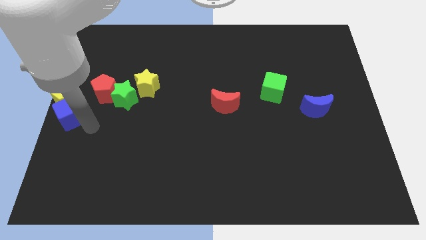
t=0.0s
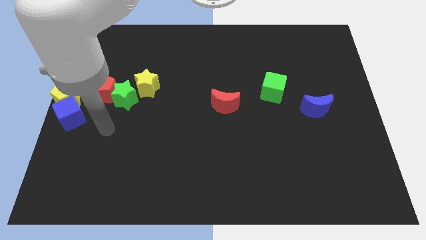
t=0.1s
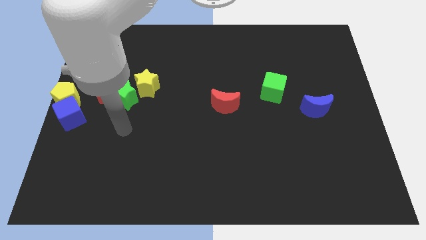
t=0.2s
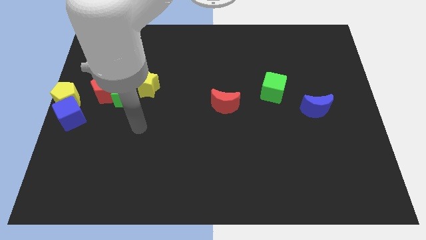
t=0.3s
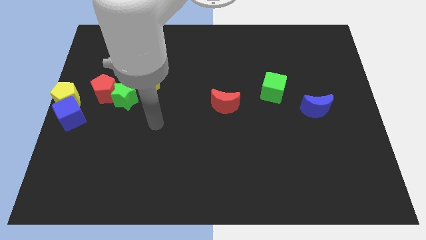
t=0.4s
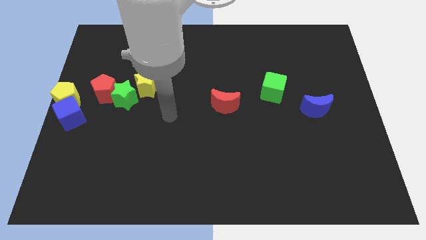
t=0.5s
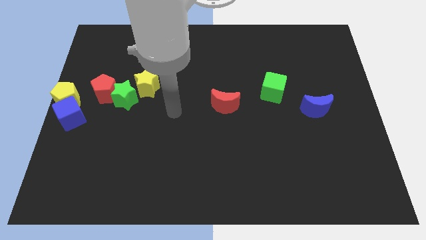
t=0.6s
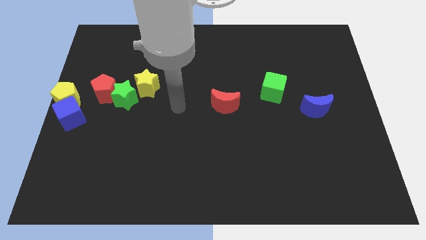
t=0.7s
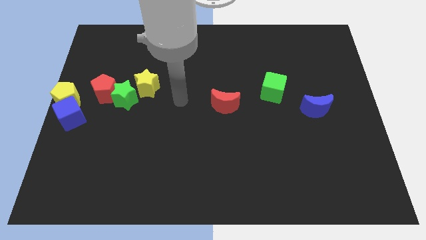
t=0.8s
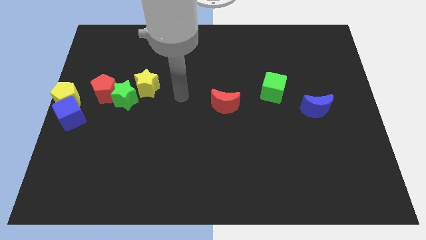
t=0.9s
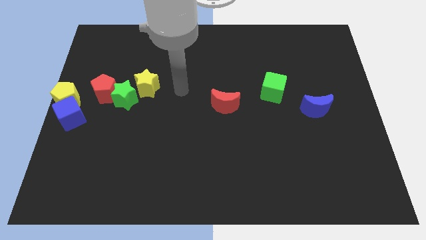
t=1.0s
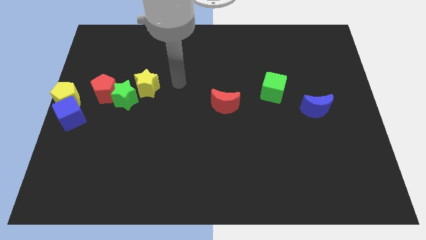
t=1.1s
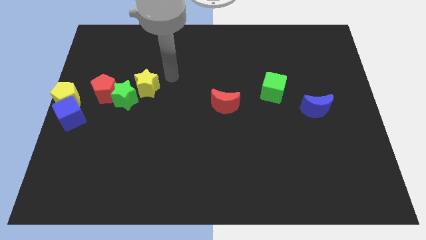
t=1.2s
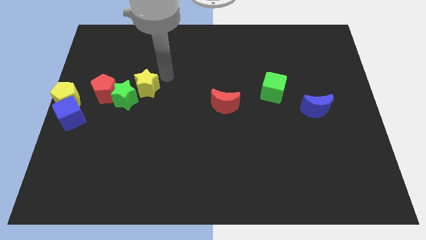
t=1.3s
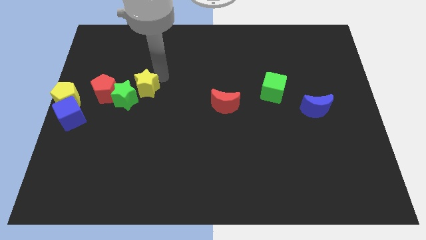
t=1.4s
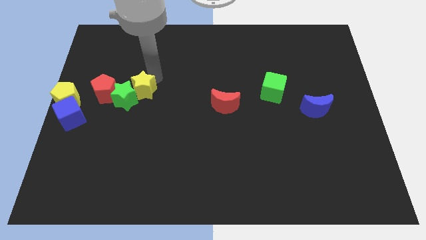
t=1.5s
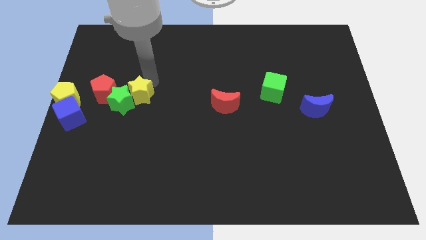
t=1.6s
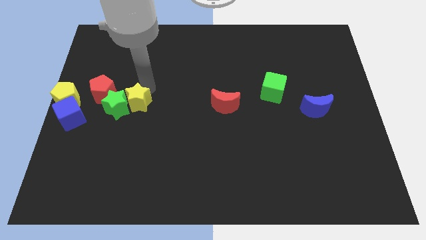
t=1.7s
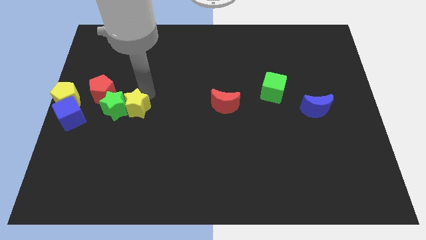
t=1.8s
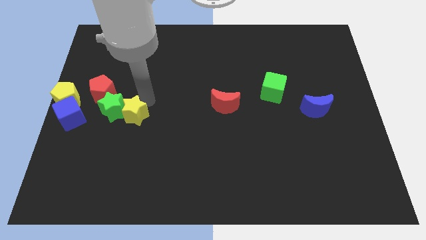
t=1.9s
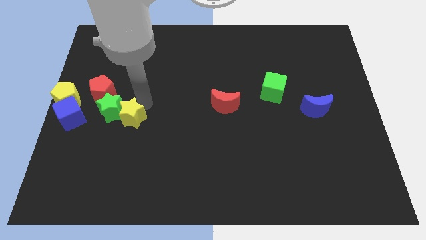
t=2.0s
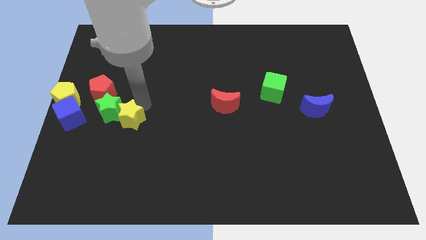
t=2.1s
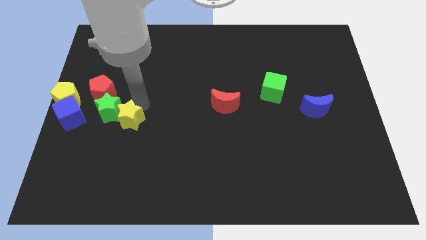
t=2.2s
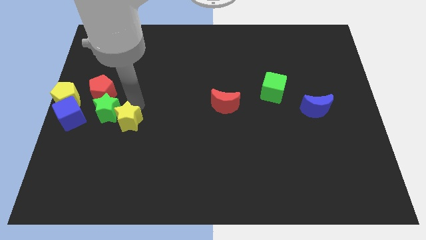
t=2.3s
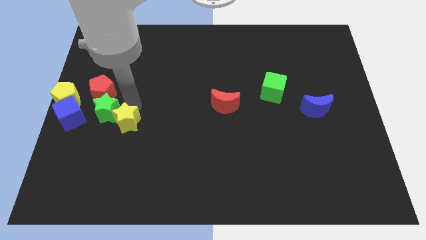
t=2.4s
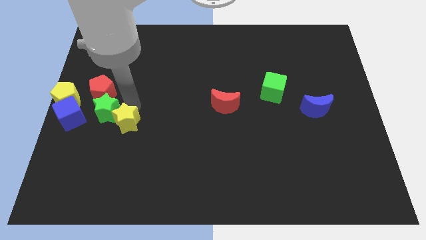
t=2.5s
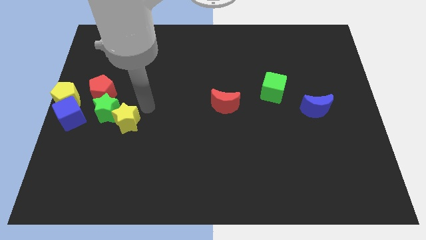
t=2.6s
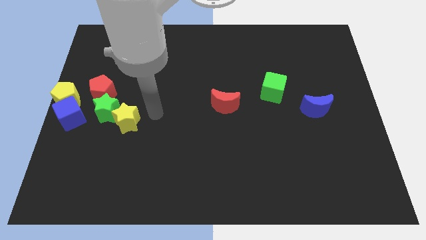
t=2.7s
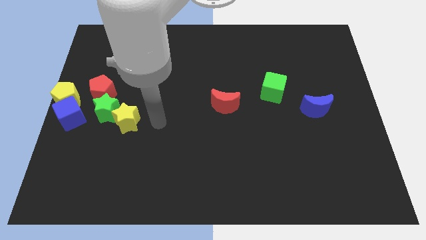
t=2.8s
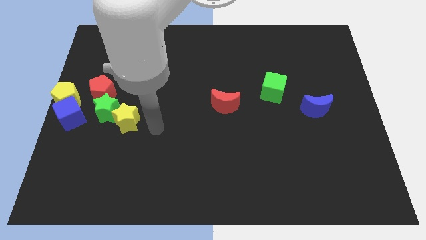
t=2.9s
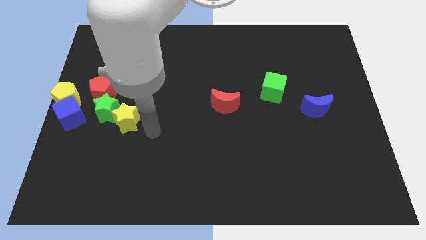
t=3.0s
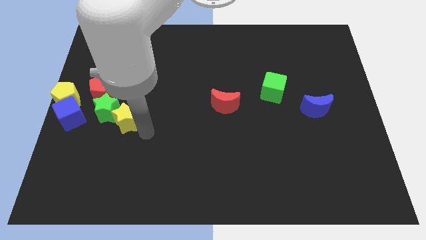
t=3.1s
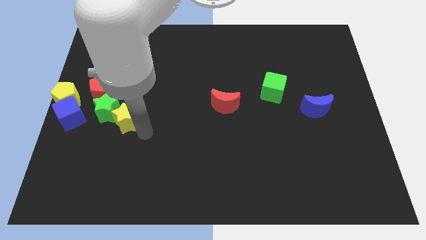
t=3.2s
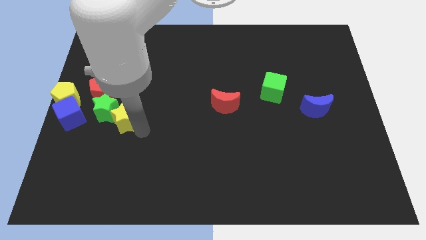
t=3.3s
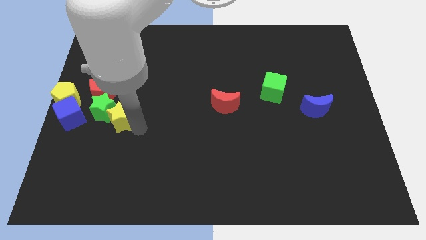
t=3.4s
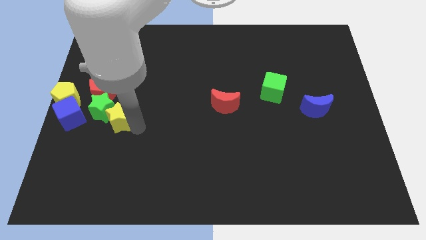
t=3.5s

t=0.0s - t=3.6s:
move yellow star towards blue cube

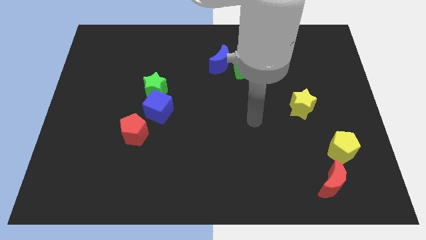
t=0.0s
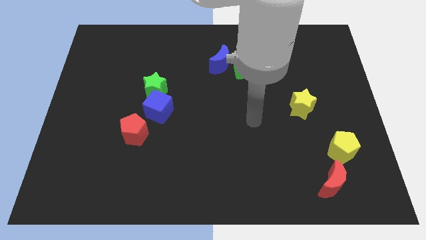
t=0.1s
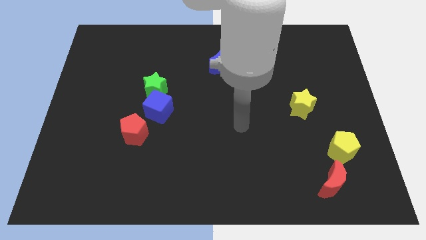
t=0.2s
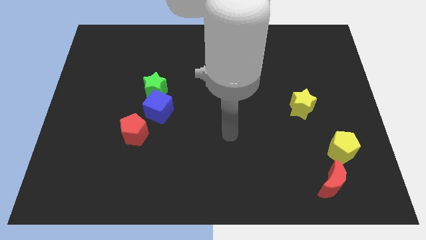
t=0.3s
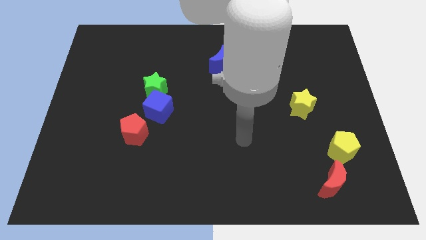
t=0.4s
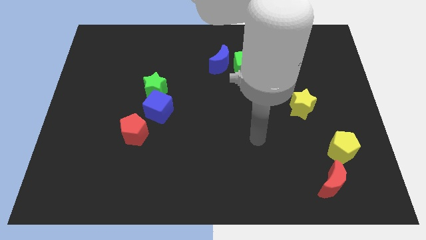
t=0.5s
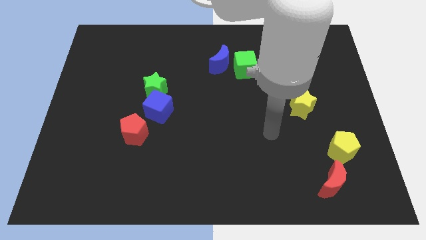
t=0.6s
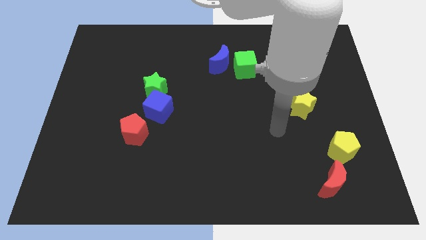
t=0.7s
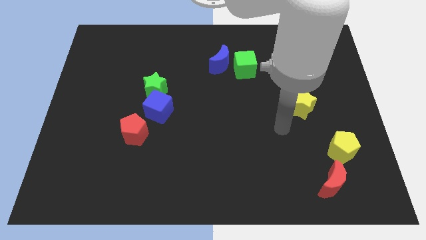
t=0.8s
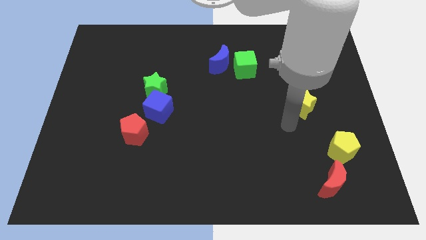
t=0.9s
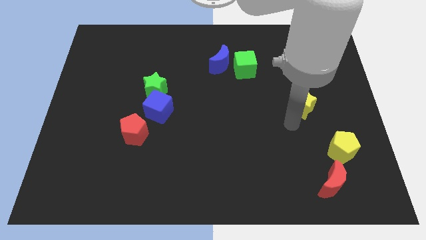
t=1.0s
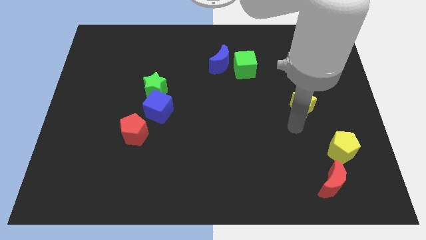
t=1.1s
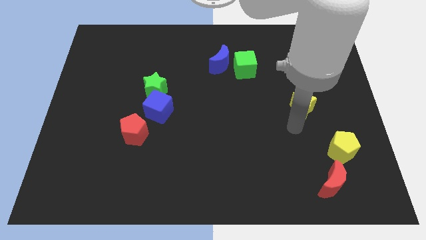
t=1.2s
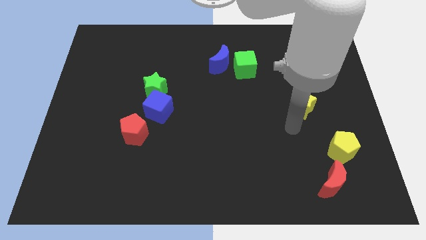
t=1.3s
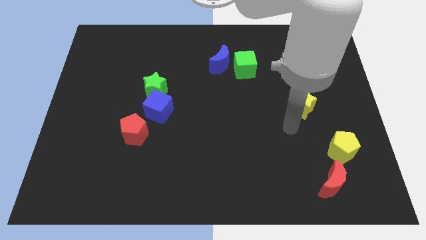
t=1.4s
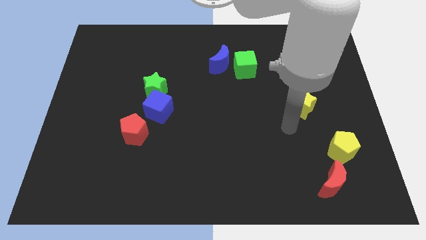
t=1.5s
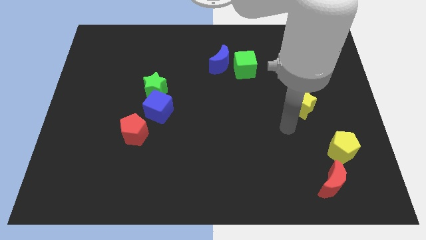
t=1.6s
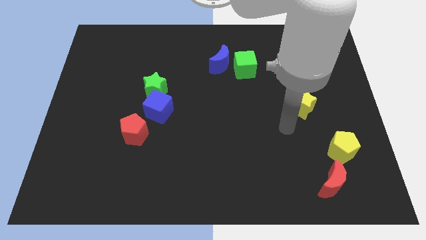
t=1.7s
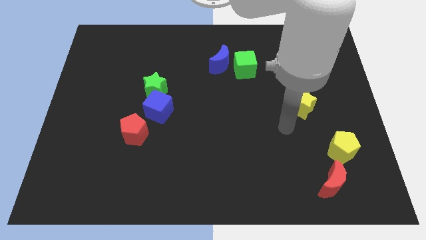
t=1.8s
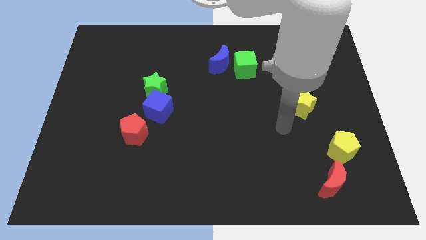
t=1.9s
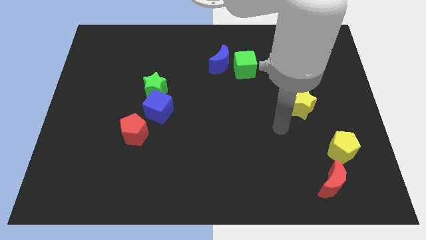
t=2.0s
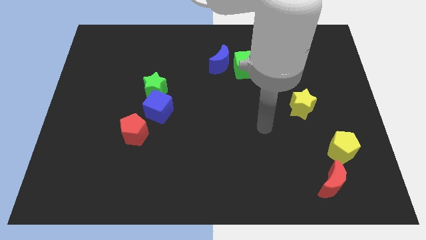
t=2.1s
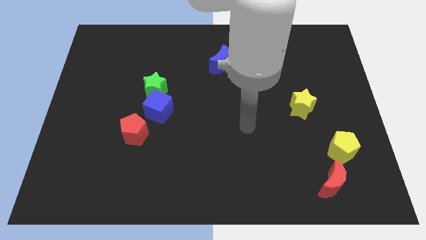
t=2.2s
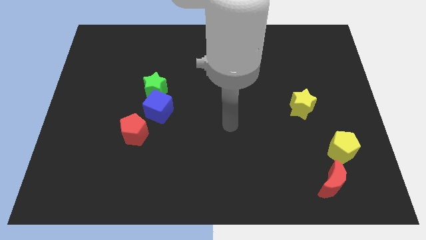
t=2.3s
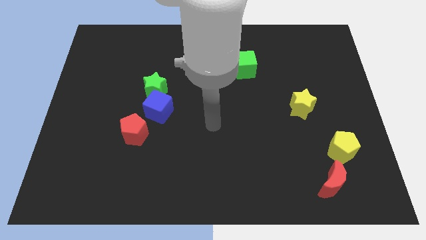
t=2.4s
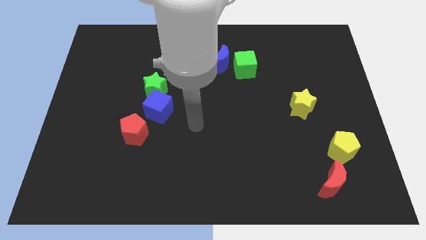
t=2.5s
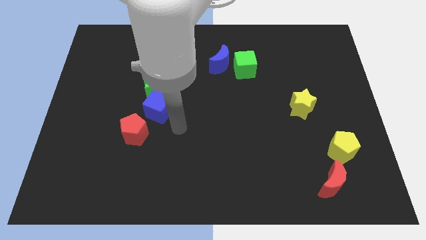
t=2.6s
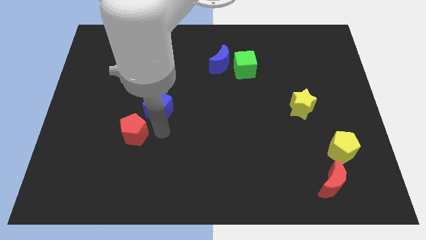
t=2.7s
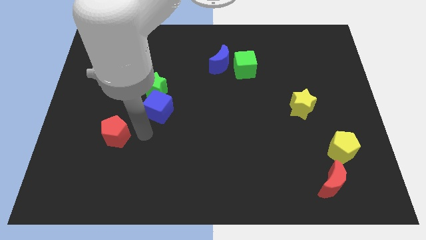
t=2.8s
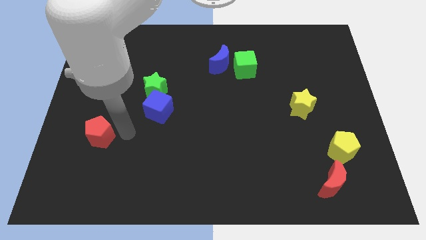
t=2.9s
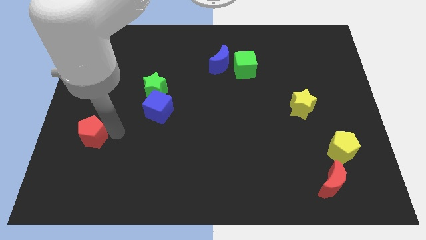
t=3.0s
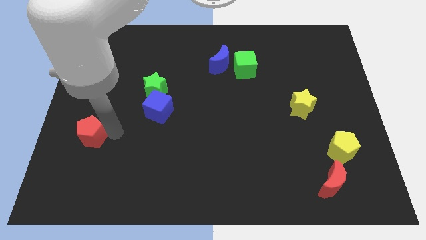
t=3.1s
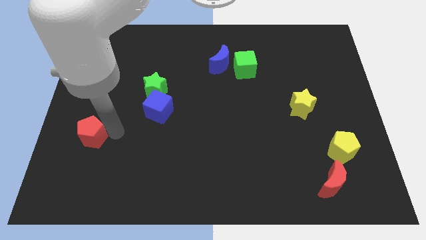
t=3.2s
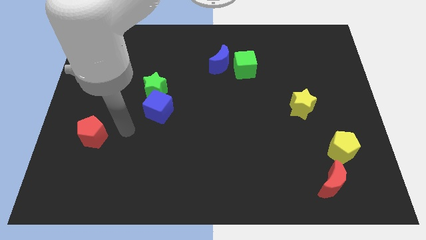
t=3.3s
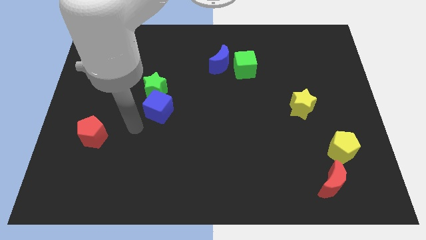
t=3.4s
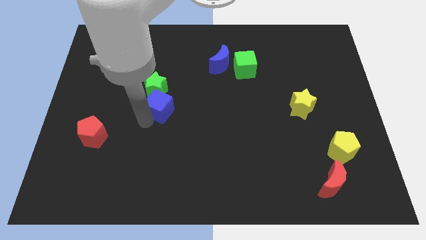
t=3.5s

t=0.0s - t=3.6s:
move the red pentagon to the left of the board

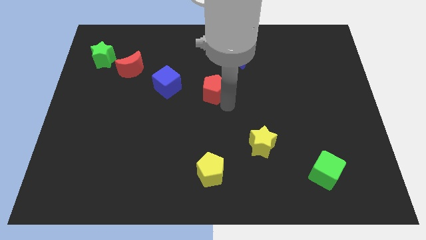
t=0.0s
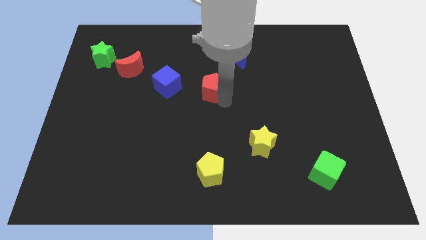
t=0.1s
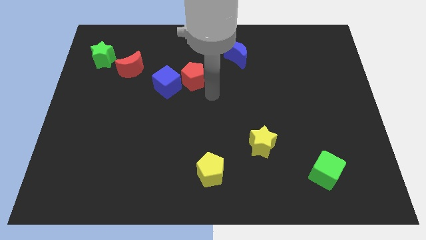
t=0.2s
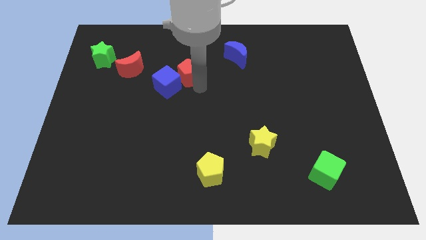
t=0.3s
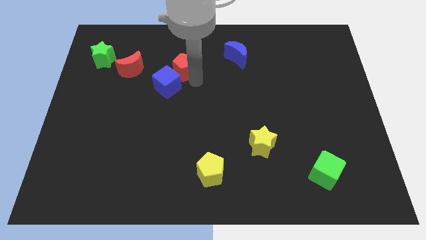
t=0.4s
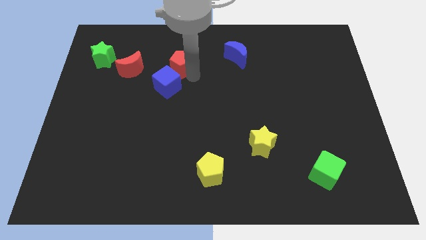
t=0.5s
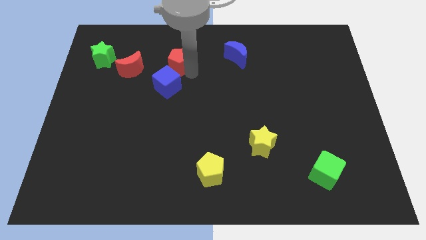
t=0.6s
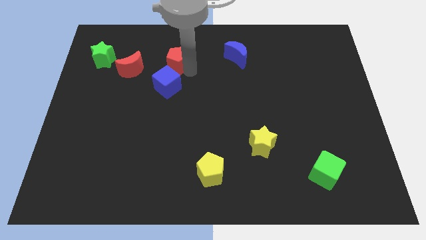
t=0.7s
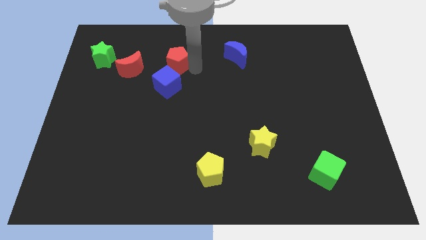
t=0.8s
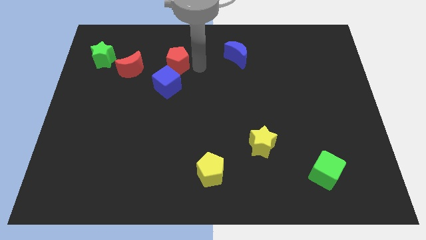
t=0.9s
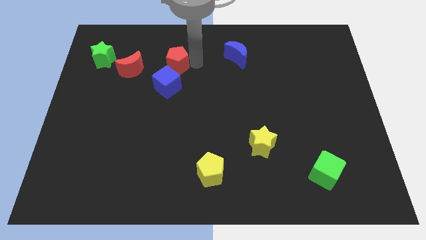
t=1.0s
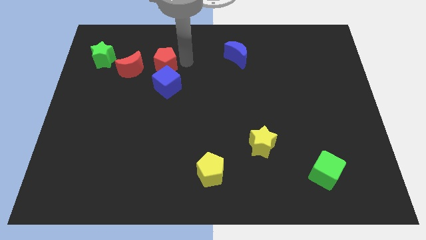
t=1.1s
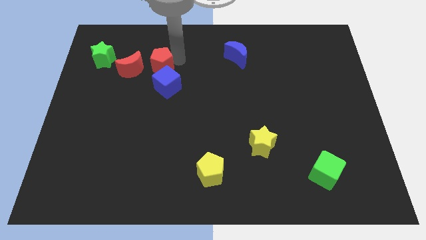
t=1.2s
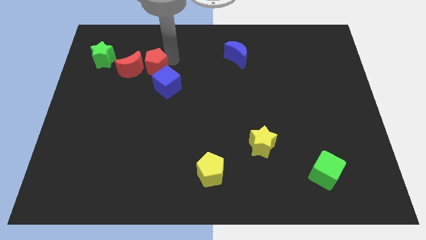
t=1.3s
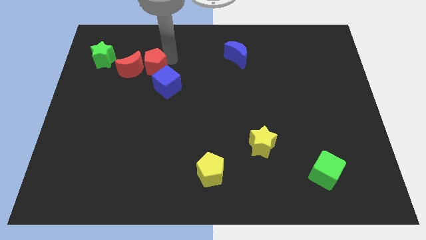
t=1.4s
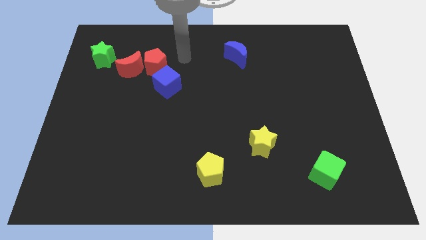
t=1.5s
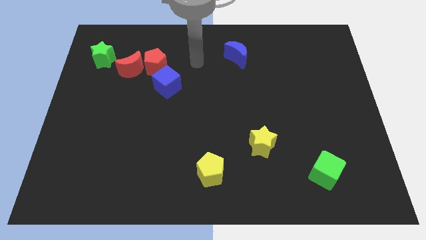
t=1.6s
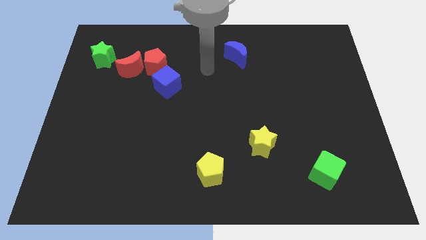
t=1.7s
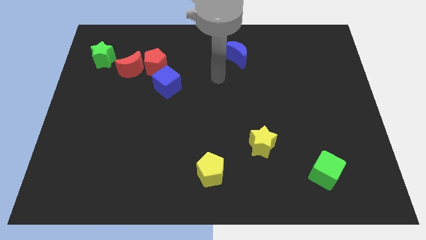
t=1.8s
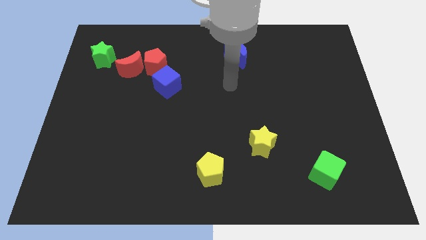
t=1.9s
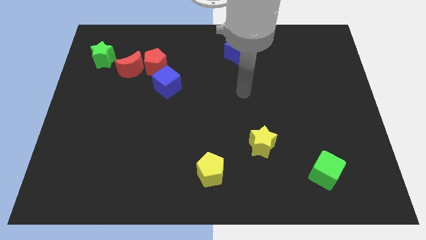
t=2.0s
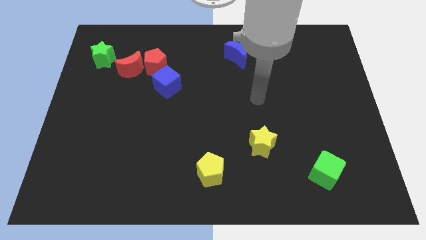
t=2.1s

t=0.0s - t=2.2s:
push the red pentagon diagonally top left to the blue cube
